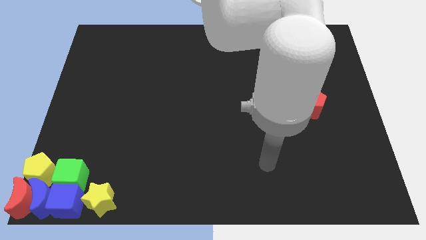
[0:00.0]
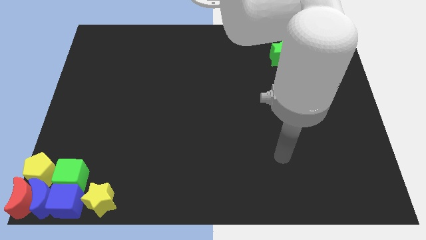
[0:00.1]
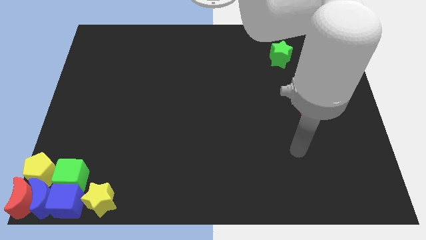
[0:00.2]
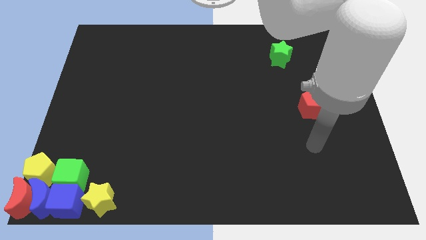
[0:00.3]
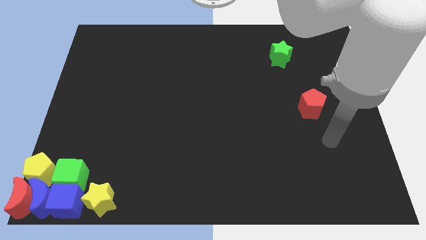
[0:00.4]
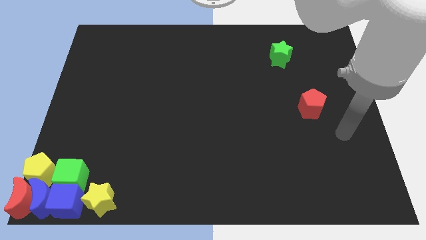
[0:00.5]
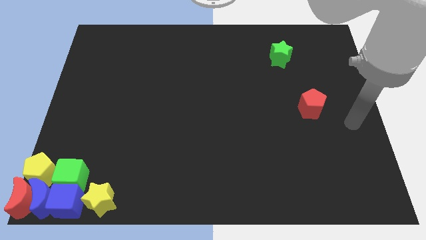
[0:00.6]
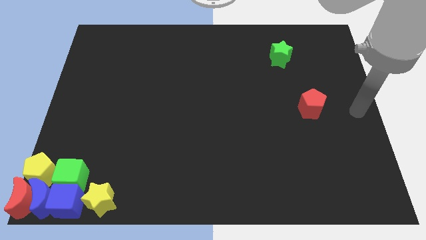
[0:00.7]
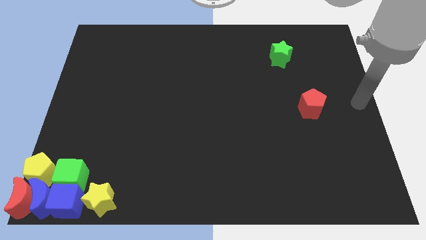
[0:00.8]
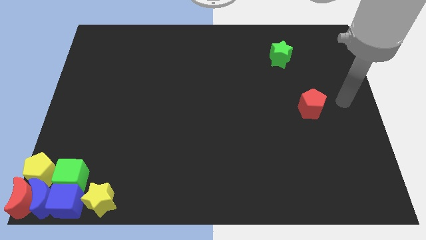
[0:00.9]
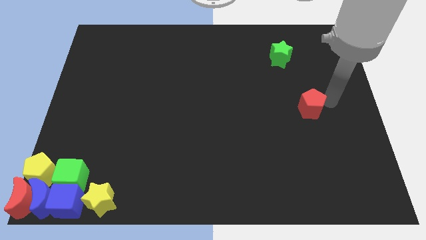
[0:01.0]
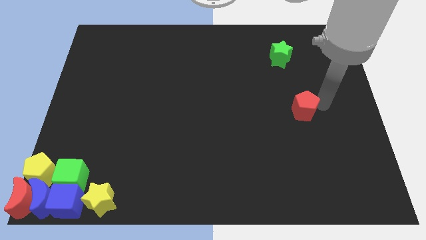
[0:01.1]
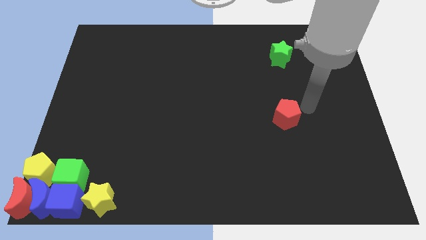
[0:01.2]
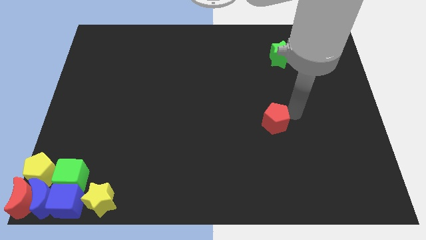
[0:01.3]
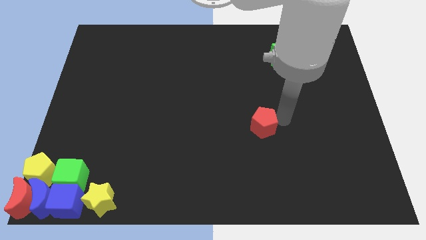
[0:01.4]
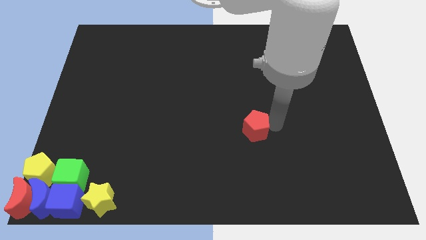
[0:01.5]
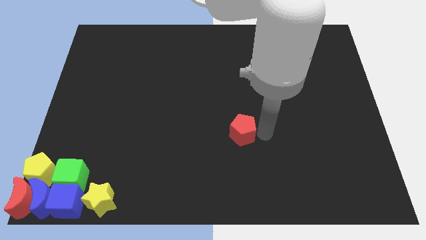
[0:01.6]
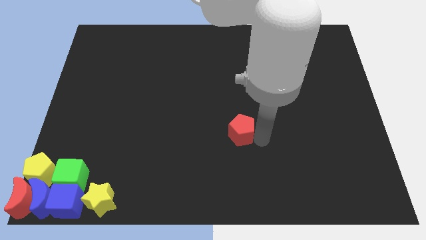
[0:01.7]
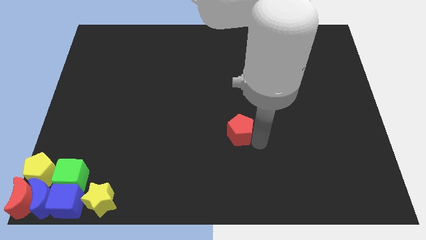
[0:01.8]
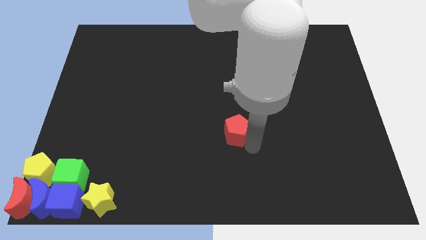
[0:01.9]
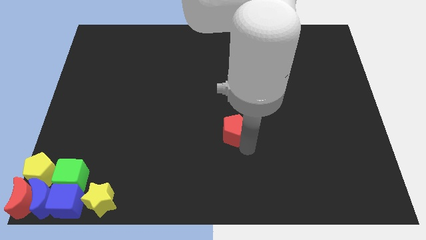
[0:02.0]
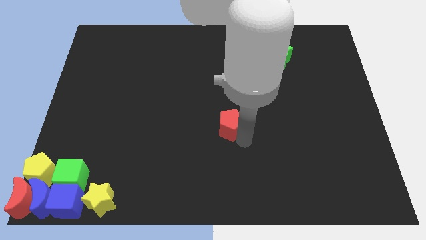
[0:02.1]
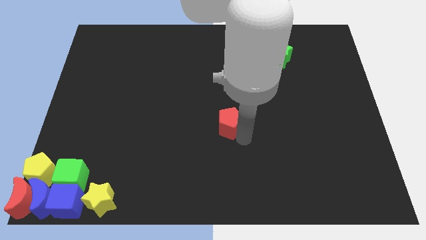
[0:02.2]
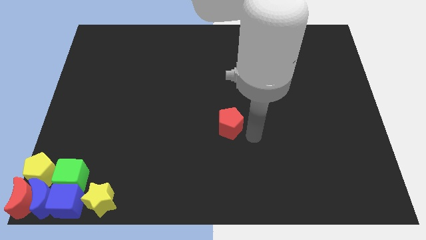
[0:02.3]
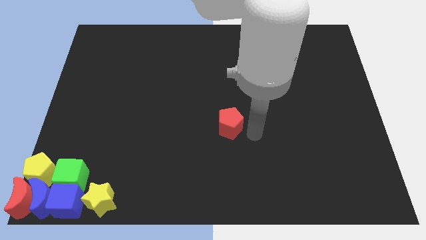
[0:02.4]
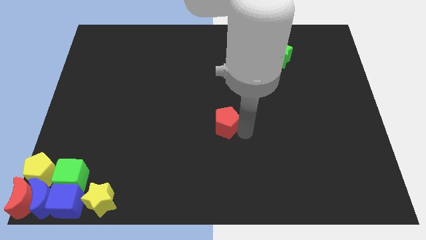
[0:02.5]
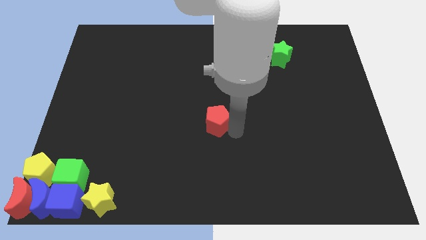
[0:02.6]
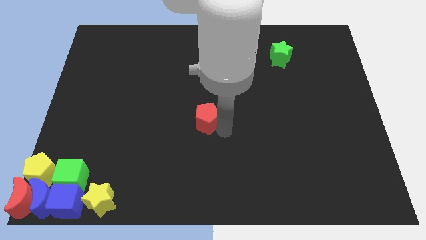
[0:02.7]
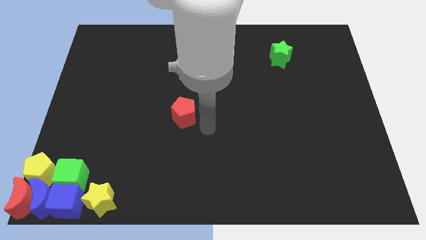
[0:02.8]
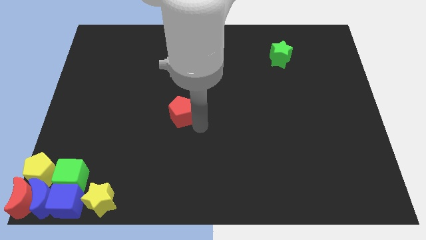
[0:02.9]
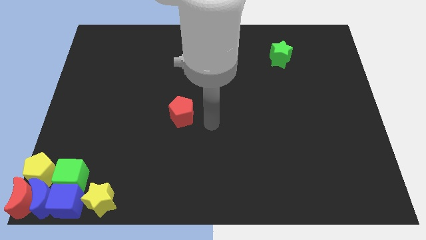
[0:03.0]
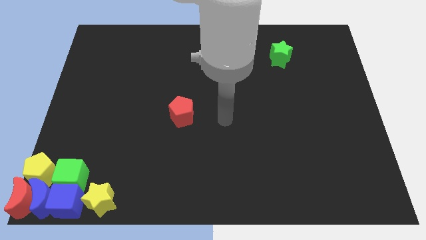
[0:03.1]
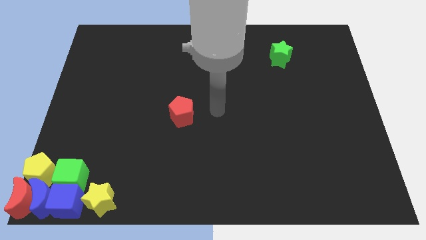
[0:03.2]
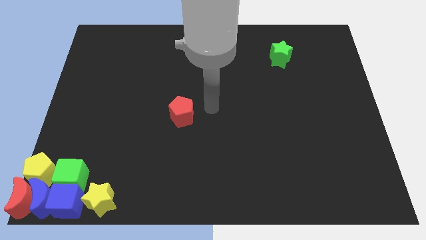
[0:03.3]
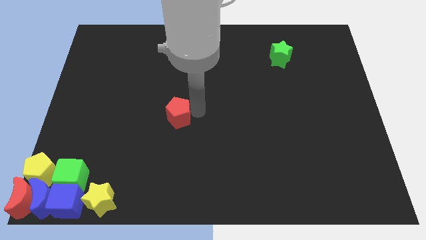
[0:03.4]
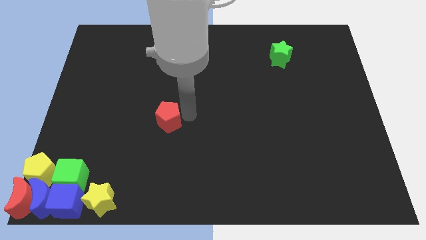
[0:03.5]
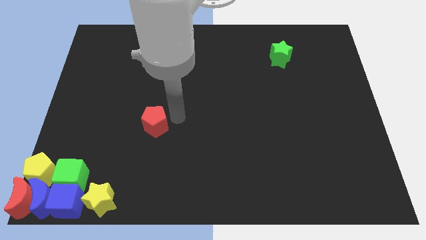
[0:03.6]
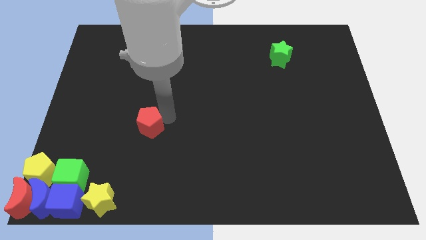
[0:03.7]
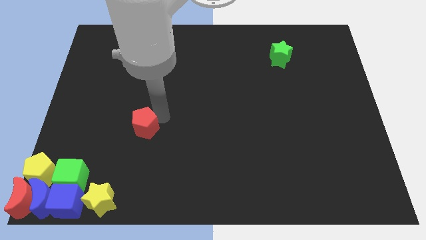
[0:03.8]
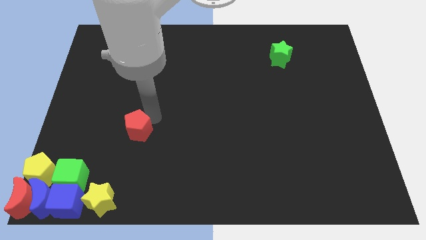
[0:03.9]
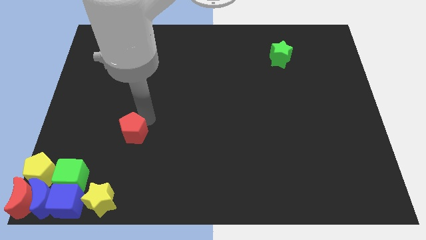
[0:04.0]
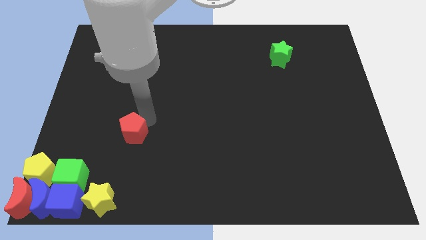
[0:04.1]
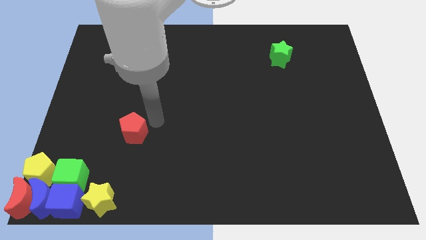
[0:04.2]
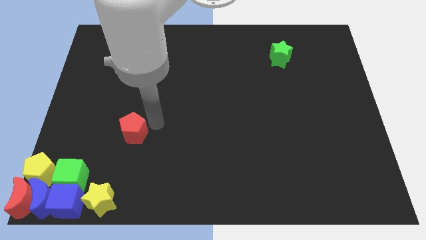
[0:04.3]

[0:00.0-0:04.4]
slide the red pentagom diagonally bottom left to the green star

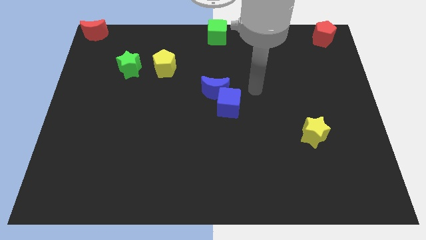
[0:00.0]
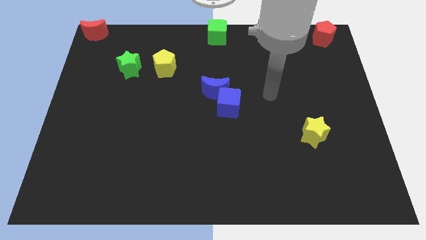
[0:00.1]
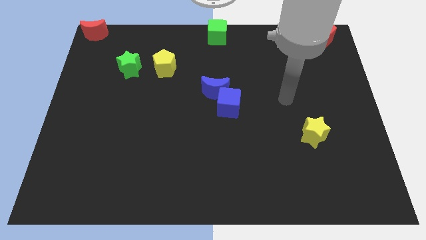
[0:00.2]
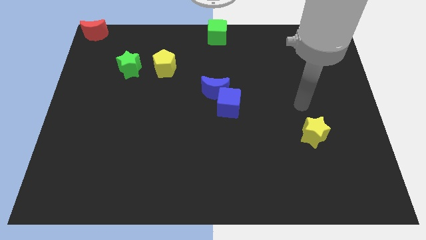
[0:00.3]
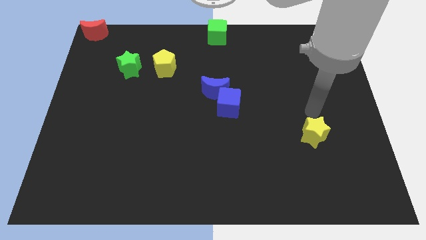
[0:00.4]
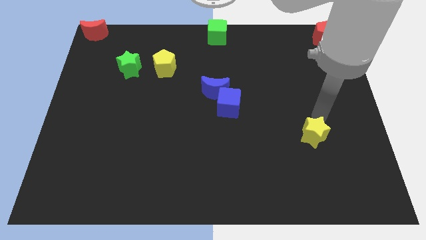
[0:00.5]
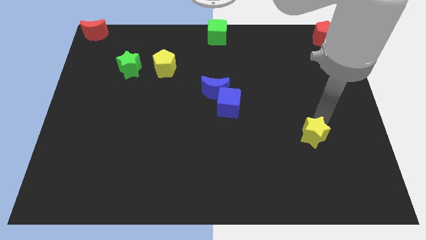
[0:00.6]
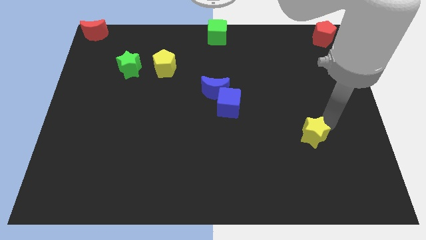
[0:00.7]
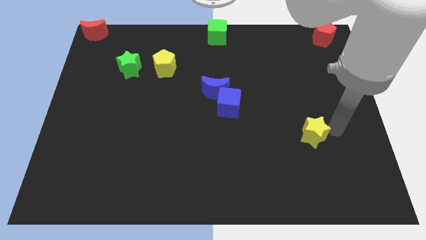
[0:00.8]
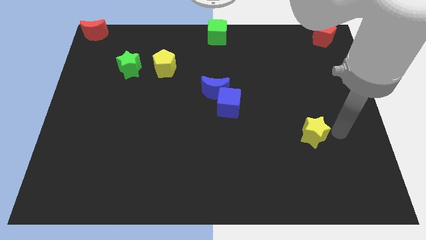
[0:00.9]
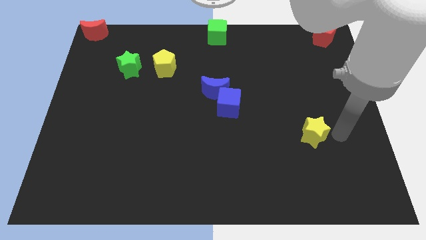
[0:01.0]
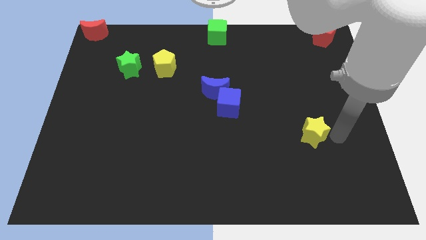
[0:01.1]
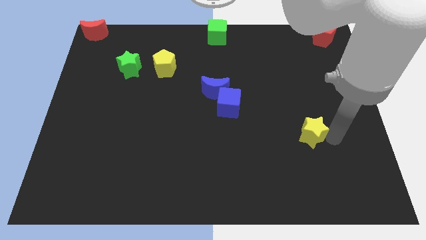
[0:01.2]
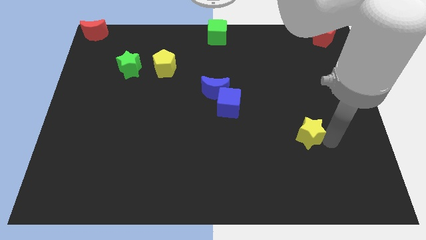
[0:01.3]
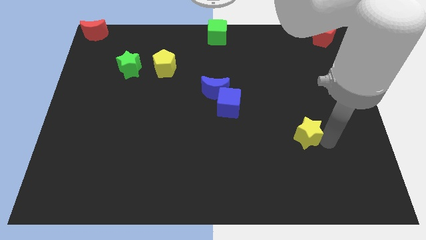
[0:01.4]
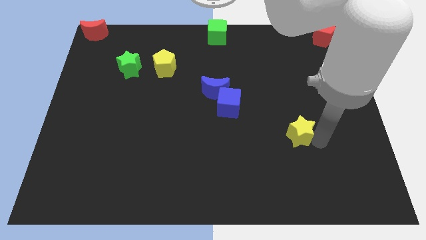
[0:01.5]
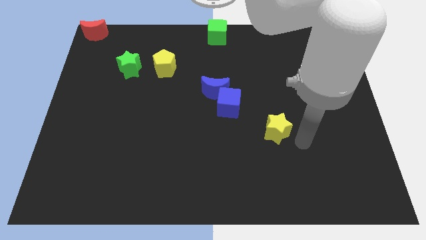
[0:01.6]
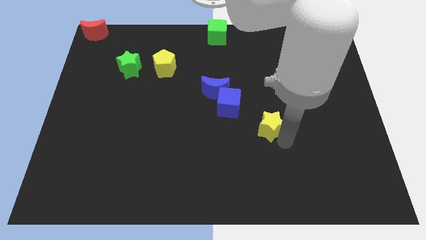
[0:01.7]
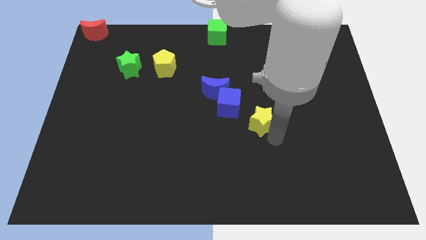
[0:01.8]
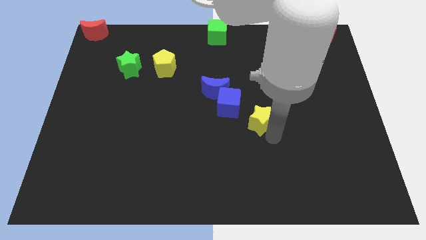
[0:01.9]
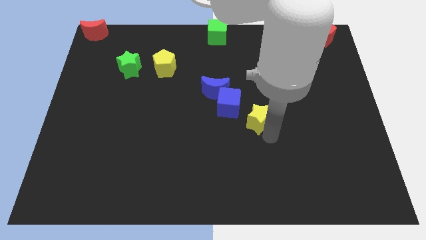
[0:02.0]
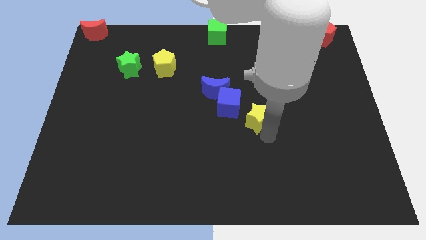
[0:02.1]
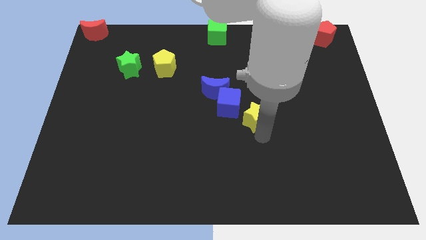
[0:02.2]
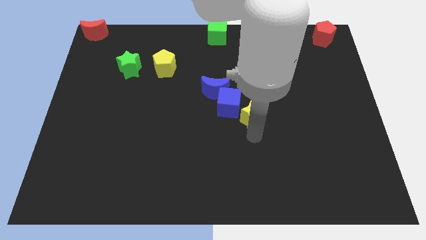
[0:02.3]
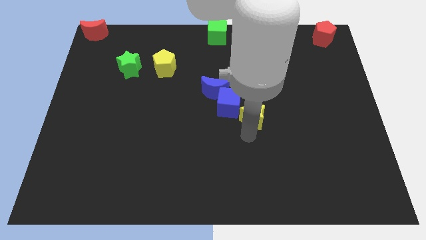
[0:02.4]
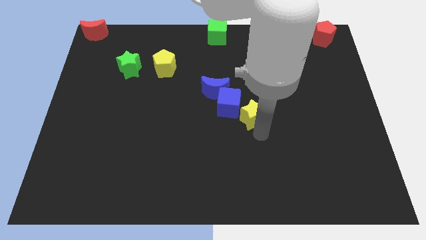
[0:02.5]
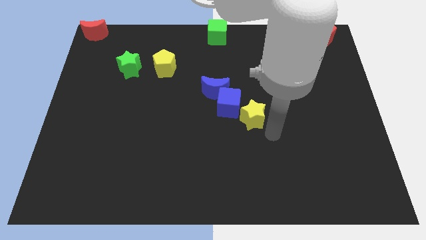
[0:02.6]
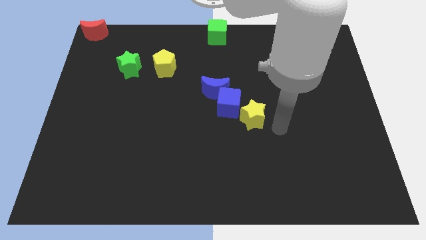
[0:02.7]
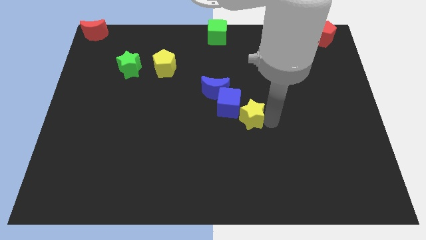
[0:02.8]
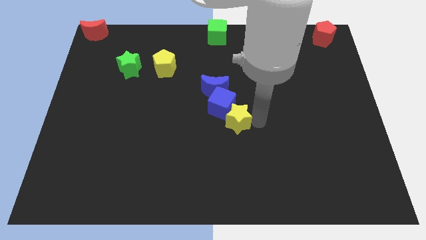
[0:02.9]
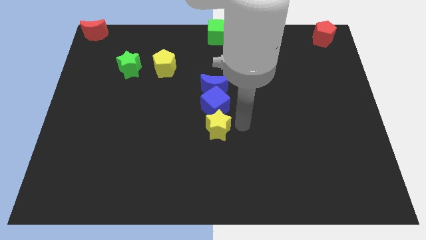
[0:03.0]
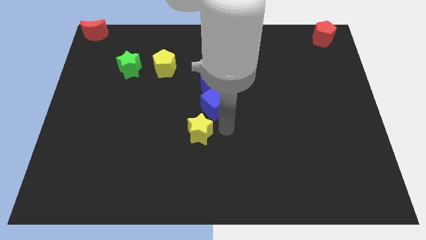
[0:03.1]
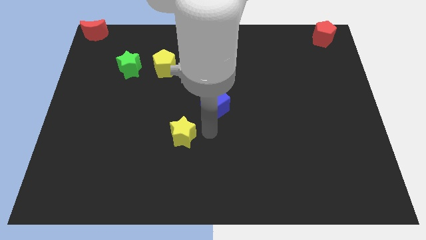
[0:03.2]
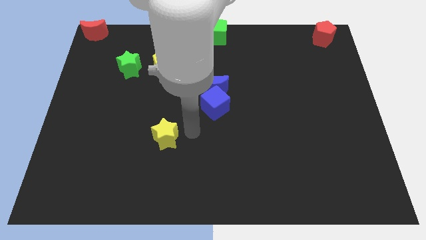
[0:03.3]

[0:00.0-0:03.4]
place the yellow star below the yellow pentagon

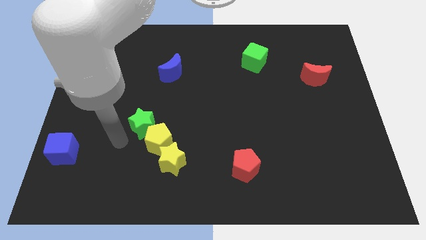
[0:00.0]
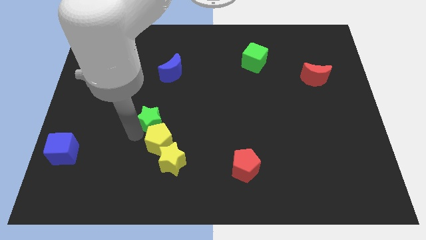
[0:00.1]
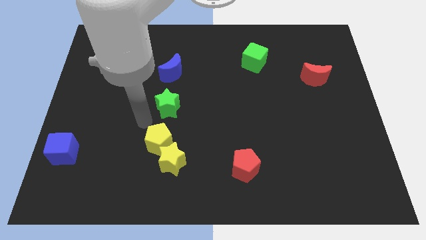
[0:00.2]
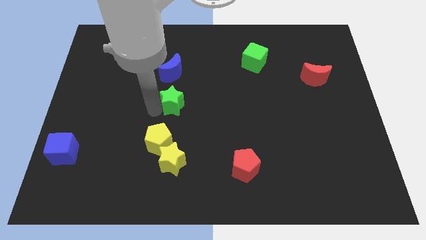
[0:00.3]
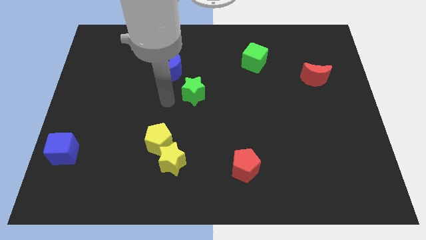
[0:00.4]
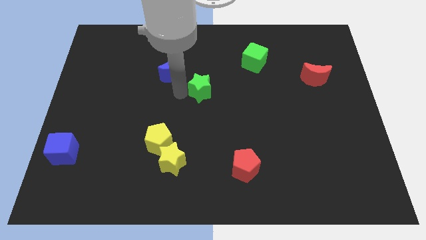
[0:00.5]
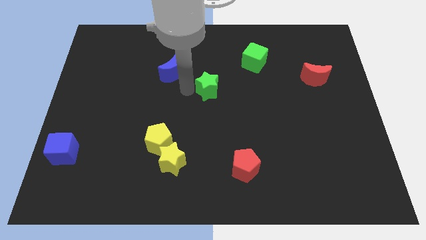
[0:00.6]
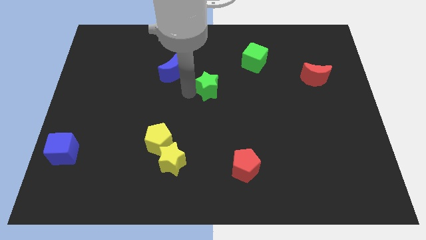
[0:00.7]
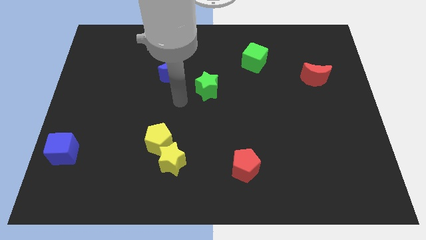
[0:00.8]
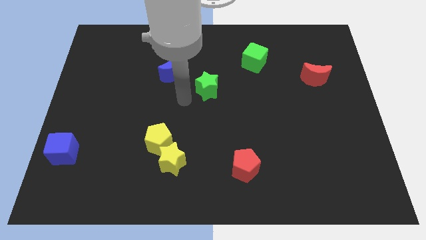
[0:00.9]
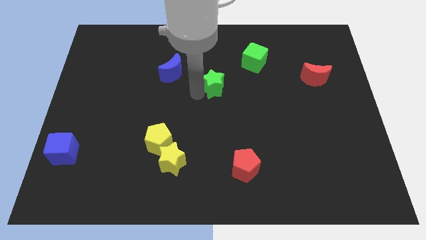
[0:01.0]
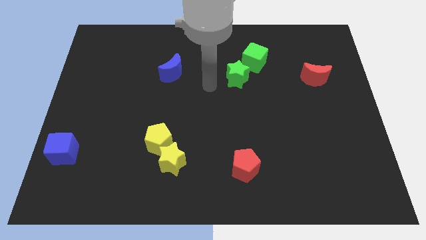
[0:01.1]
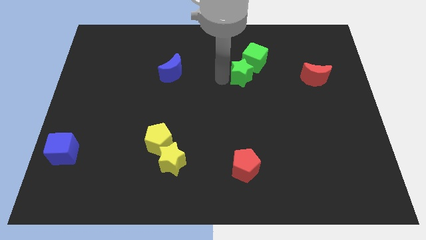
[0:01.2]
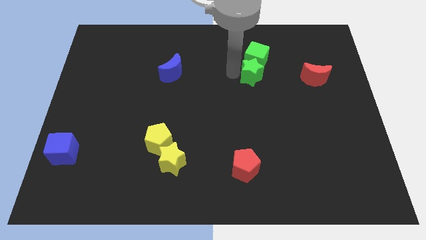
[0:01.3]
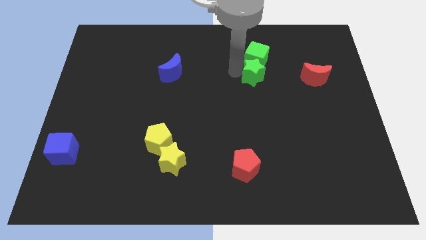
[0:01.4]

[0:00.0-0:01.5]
push the green star into the green cube
